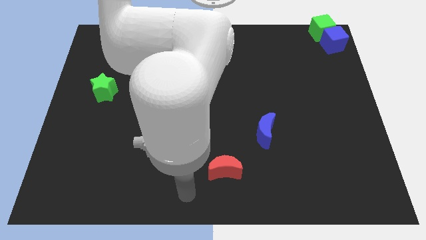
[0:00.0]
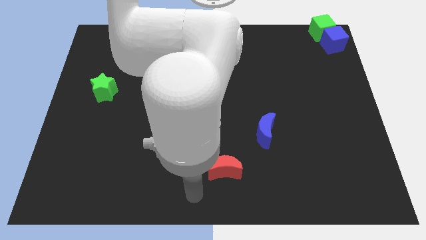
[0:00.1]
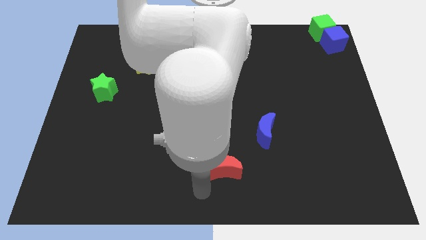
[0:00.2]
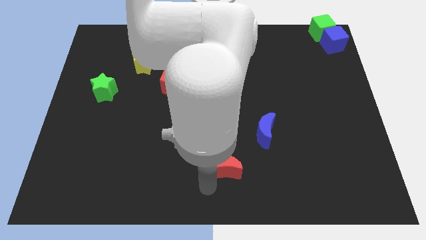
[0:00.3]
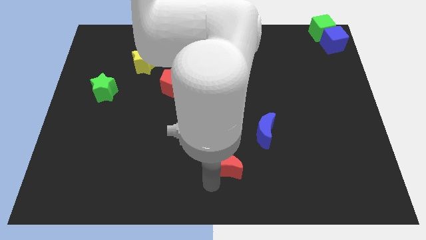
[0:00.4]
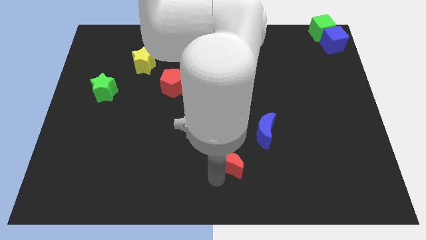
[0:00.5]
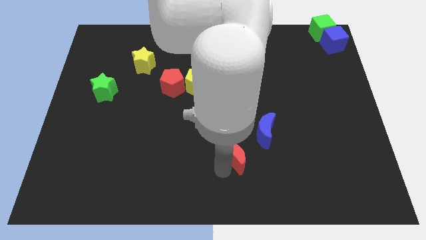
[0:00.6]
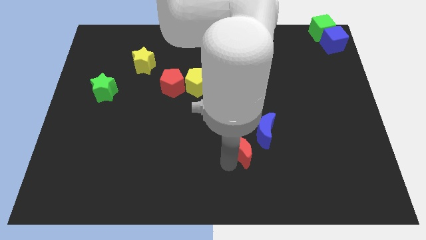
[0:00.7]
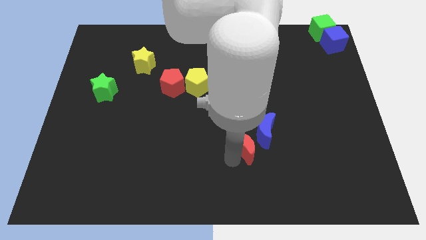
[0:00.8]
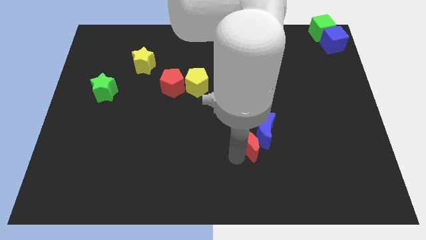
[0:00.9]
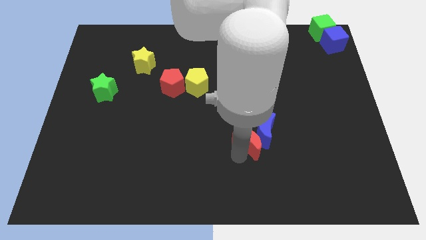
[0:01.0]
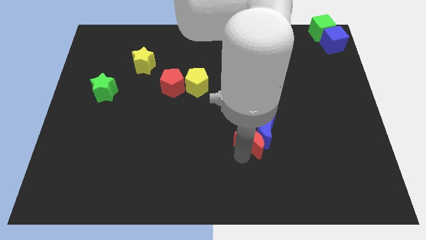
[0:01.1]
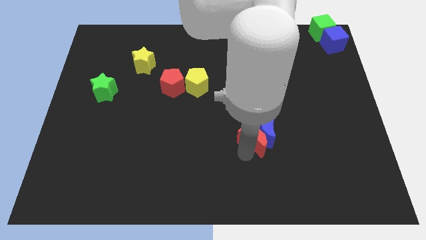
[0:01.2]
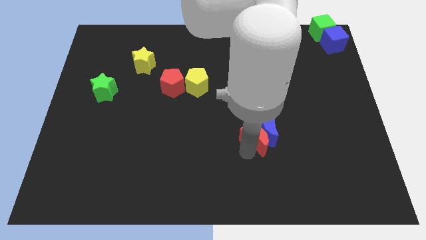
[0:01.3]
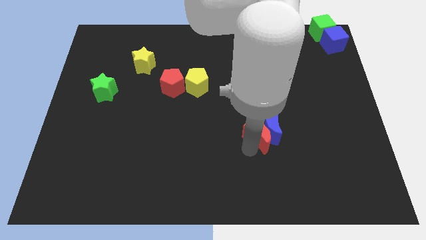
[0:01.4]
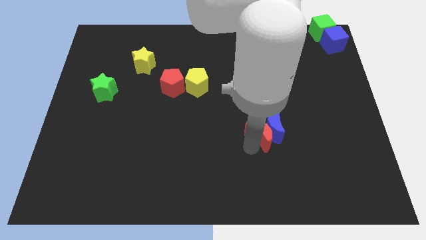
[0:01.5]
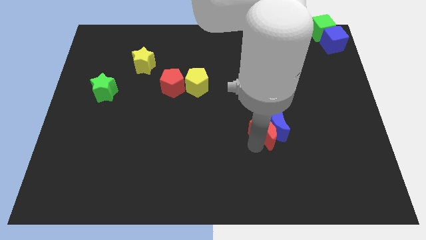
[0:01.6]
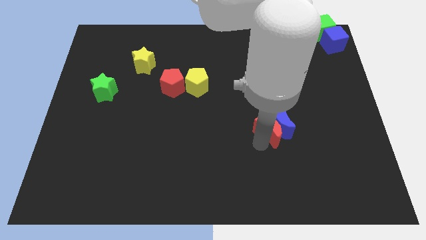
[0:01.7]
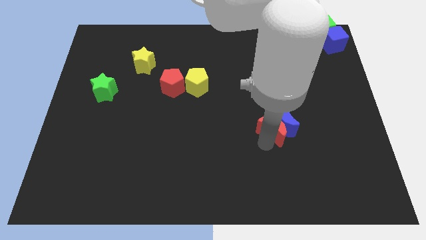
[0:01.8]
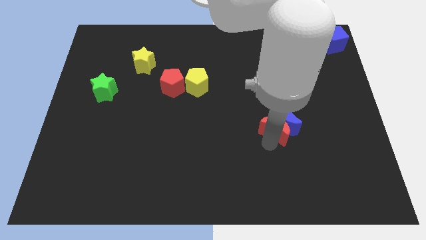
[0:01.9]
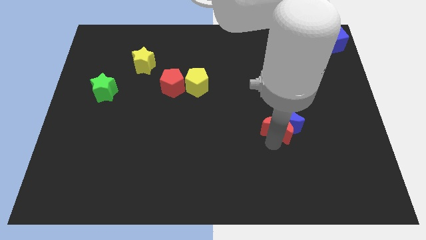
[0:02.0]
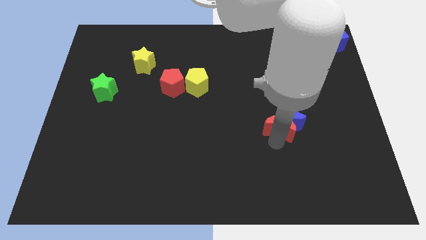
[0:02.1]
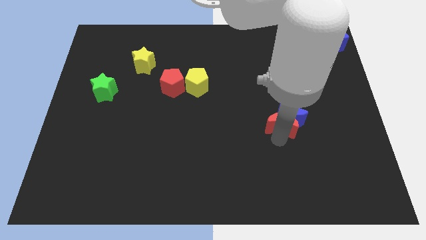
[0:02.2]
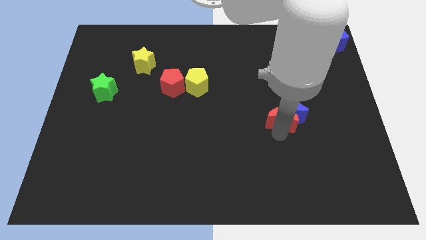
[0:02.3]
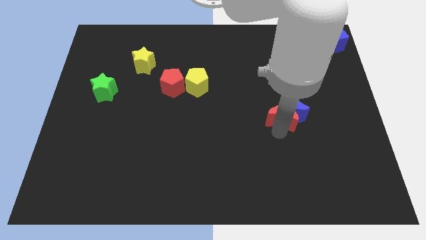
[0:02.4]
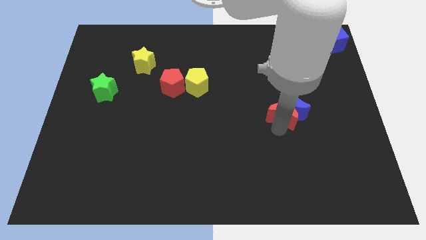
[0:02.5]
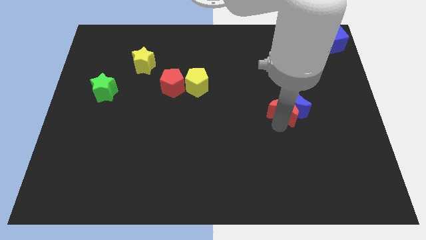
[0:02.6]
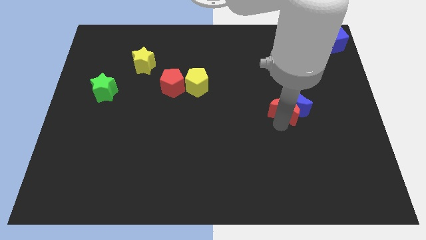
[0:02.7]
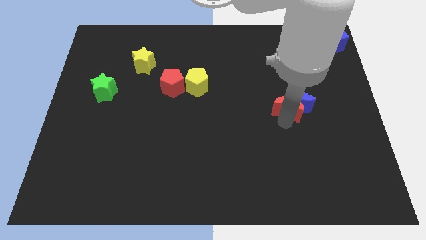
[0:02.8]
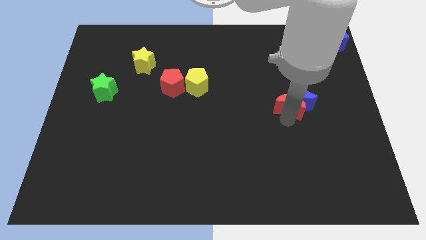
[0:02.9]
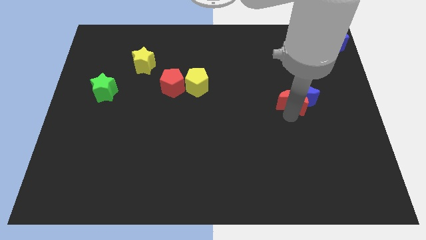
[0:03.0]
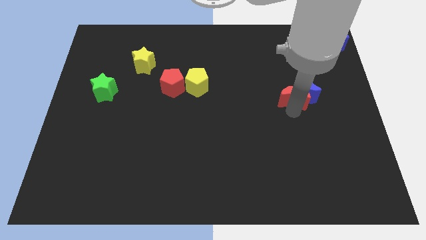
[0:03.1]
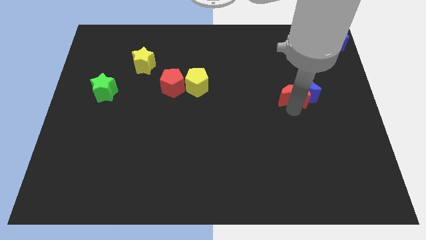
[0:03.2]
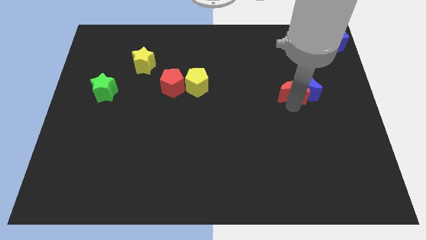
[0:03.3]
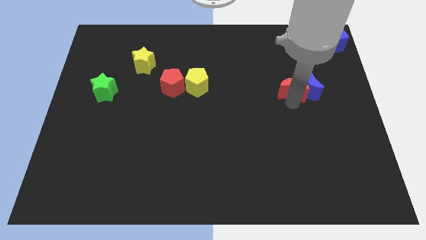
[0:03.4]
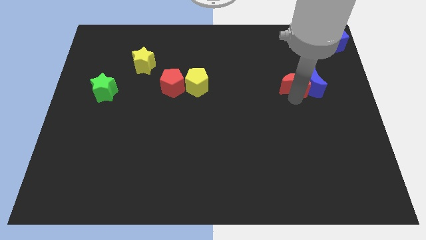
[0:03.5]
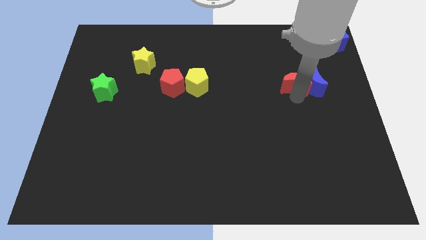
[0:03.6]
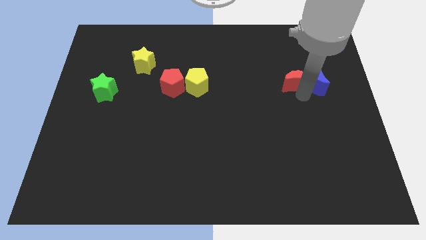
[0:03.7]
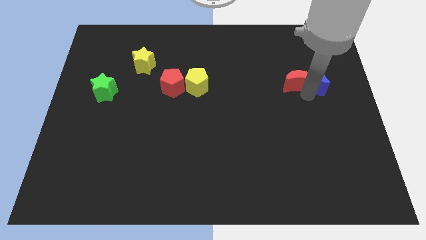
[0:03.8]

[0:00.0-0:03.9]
move crescents towards cubes

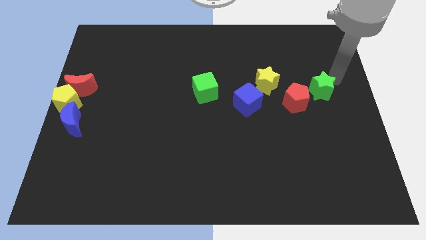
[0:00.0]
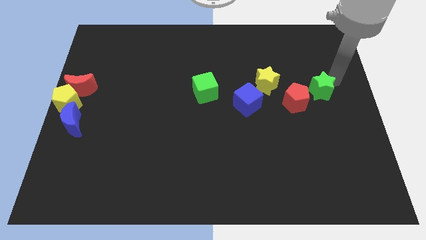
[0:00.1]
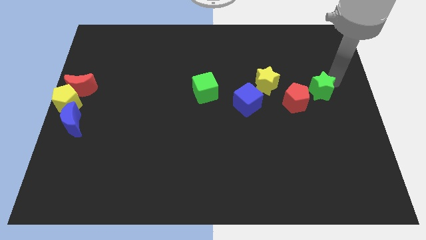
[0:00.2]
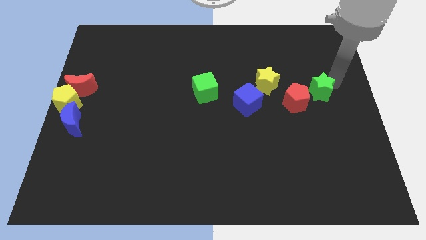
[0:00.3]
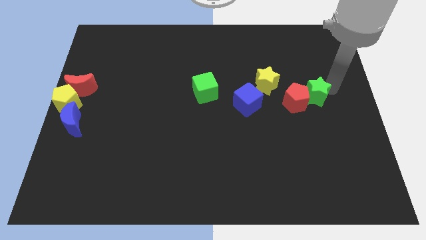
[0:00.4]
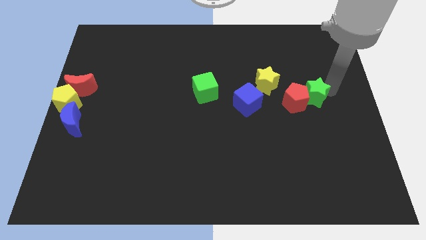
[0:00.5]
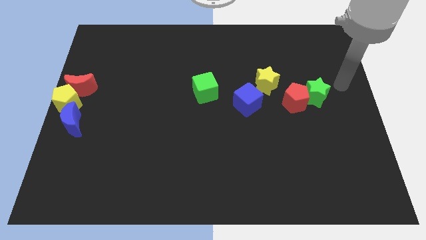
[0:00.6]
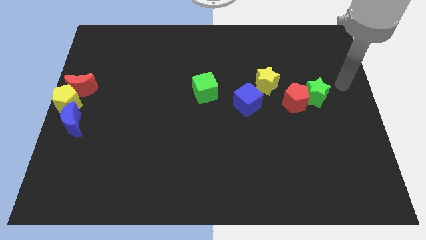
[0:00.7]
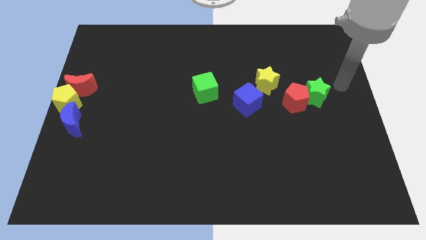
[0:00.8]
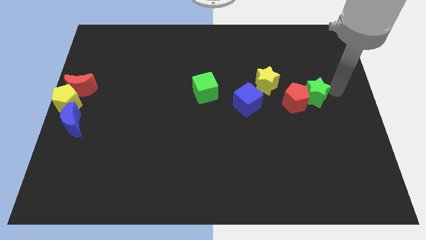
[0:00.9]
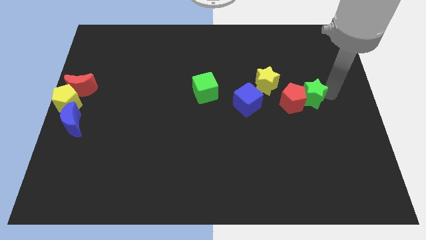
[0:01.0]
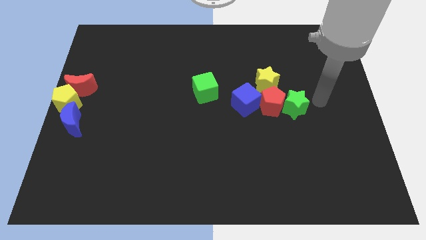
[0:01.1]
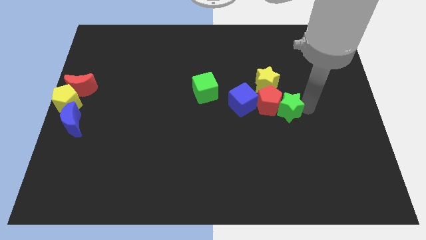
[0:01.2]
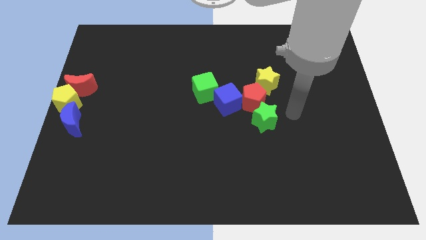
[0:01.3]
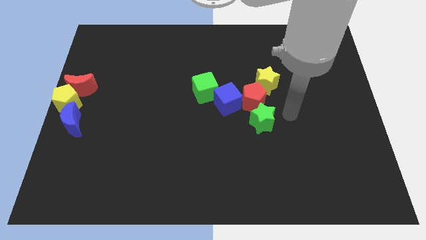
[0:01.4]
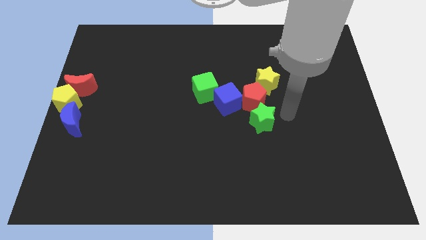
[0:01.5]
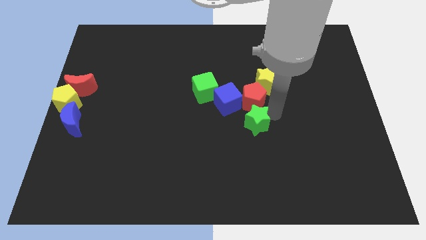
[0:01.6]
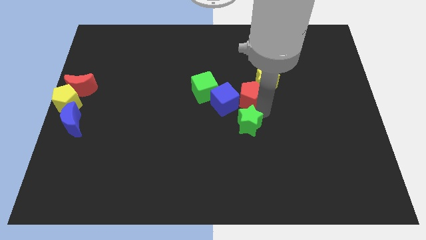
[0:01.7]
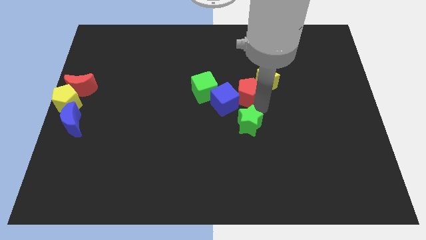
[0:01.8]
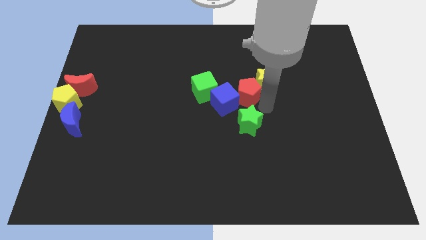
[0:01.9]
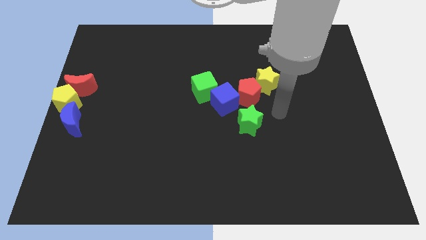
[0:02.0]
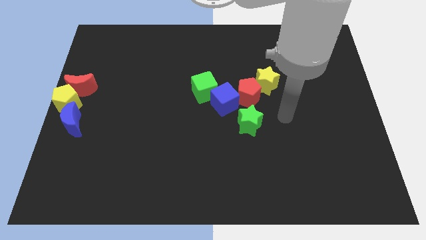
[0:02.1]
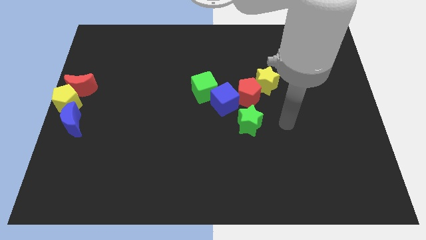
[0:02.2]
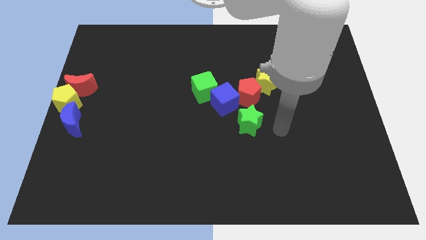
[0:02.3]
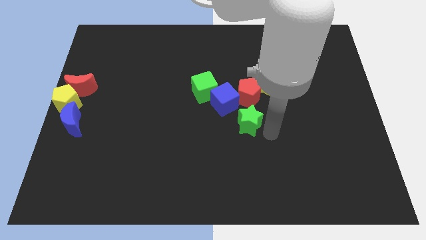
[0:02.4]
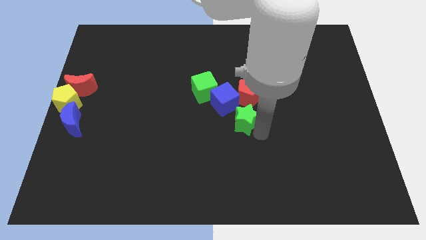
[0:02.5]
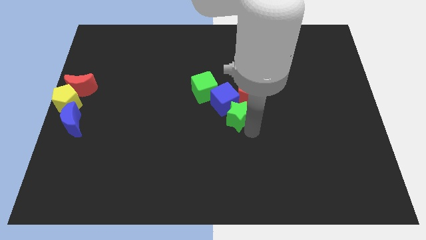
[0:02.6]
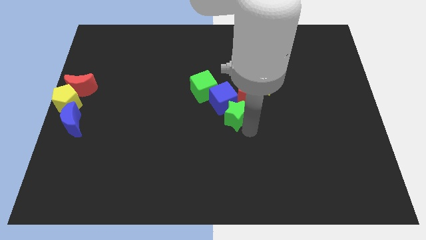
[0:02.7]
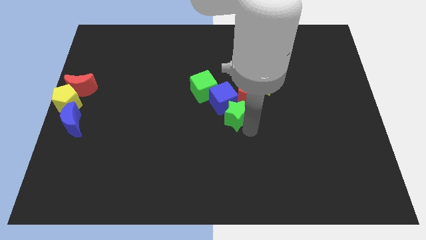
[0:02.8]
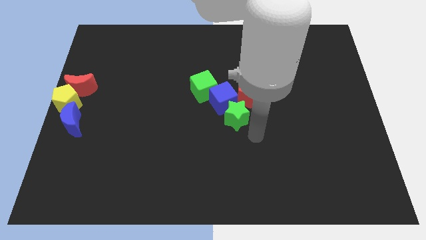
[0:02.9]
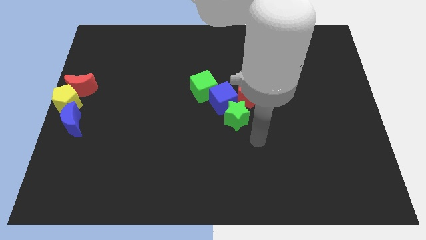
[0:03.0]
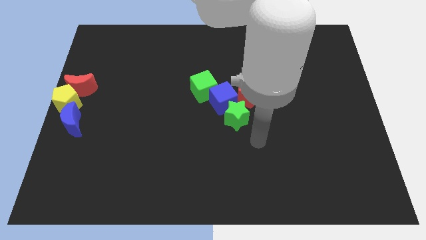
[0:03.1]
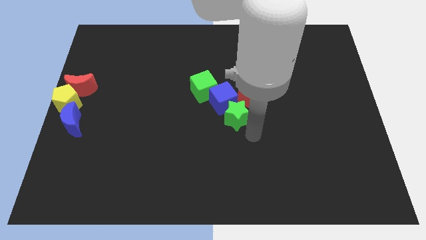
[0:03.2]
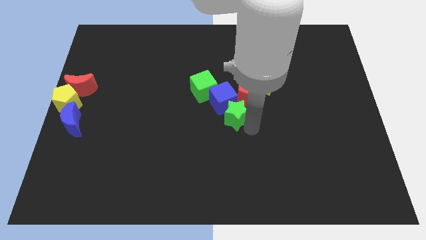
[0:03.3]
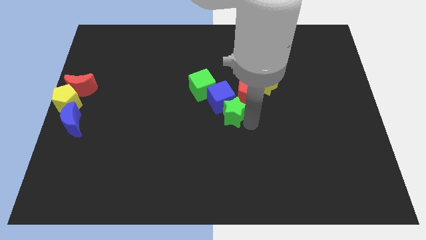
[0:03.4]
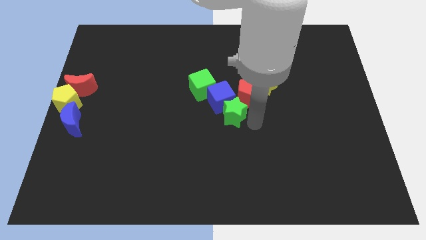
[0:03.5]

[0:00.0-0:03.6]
push the green star into blue cube

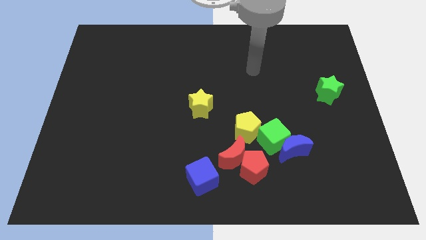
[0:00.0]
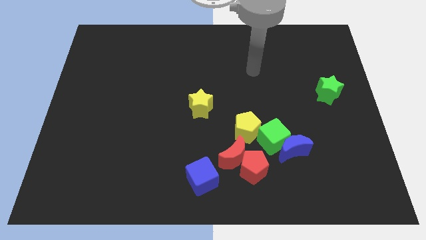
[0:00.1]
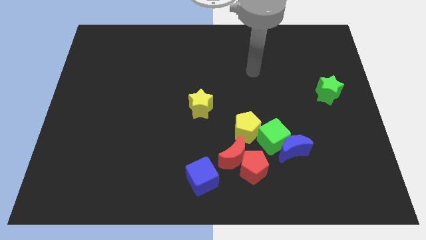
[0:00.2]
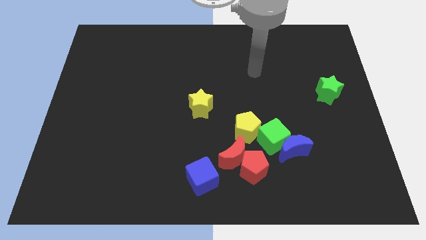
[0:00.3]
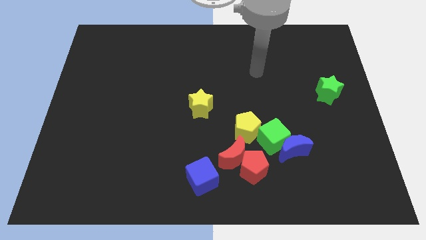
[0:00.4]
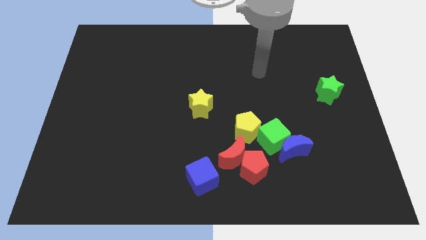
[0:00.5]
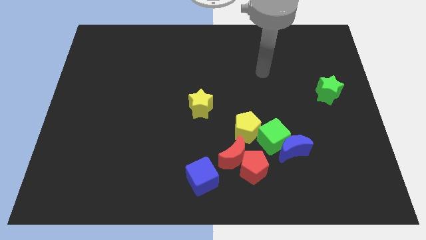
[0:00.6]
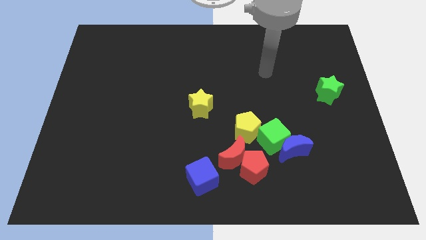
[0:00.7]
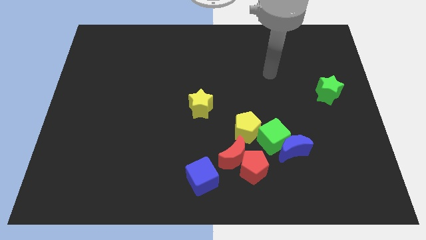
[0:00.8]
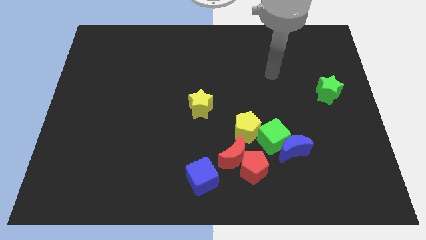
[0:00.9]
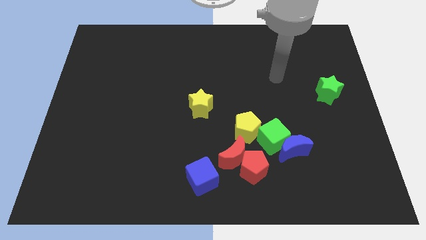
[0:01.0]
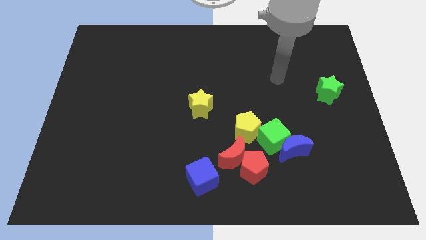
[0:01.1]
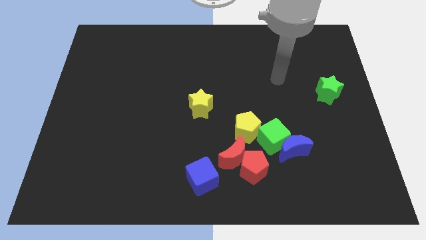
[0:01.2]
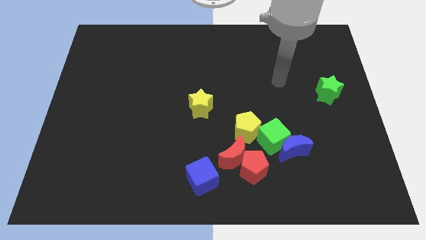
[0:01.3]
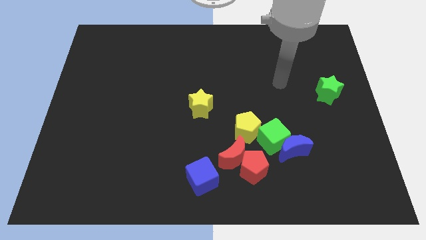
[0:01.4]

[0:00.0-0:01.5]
move your hand above the green cube
